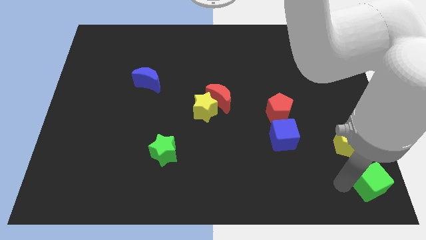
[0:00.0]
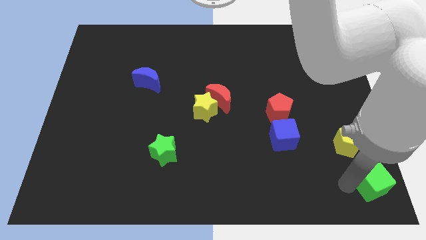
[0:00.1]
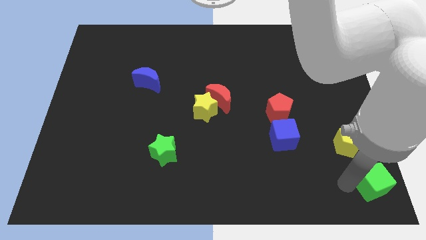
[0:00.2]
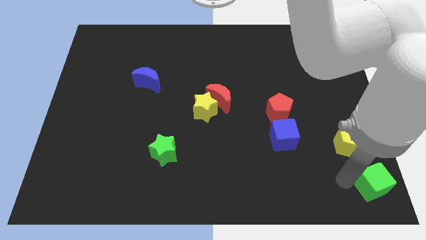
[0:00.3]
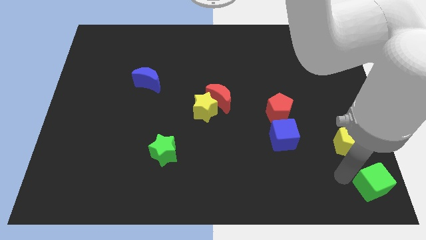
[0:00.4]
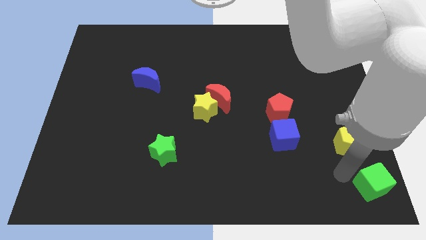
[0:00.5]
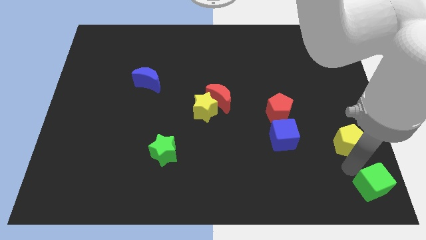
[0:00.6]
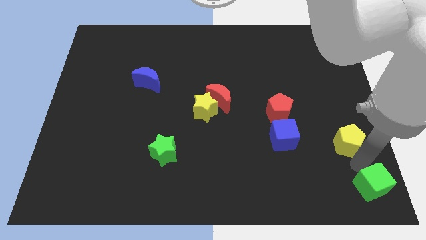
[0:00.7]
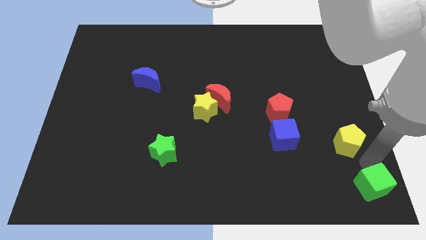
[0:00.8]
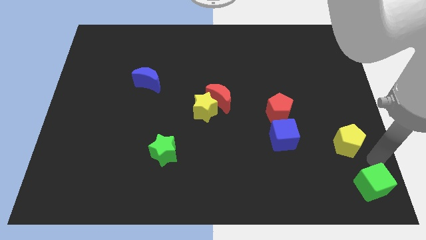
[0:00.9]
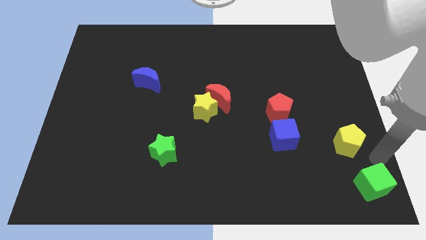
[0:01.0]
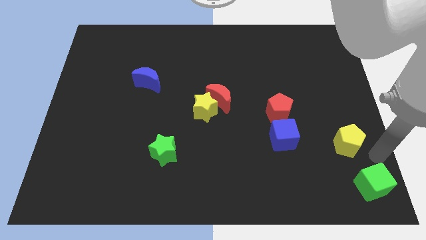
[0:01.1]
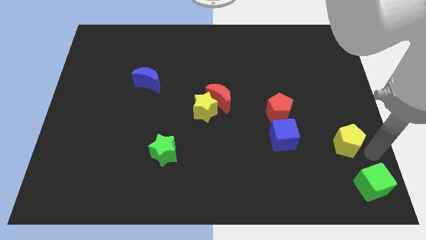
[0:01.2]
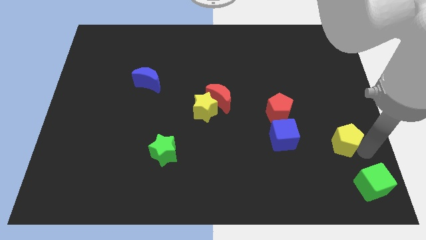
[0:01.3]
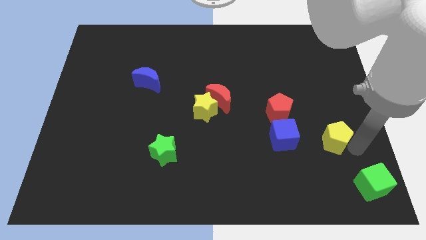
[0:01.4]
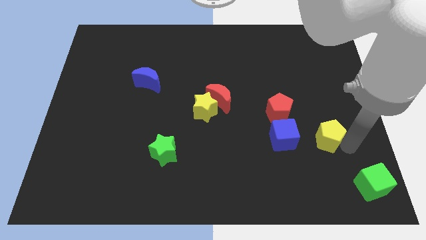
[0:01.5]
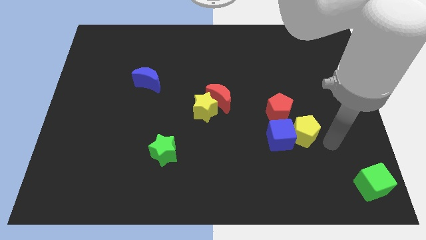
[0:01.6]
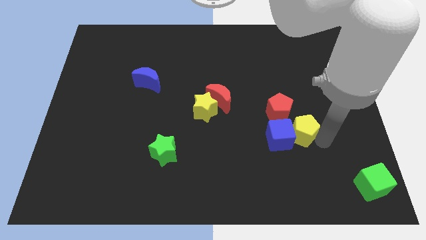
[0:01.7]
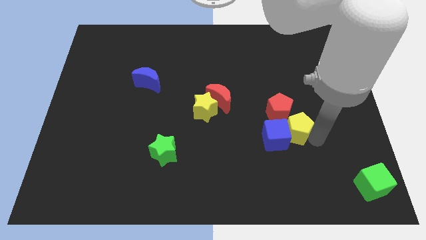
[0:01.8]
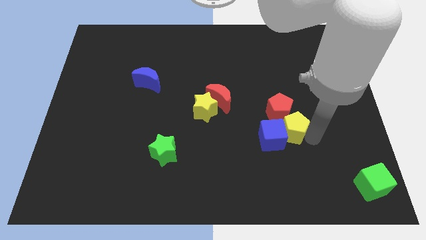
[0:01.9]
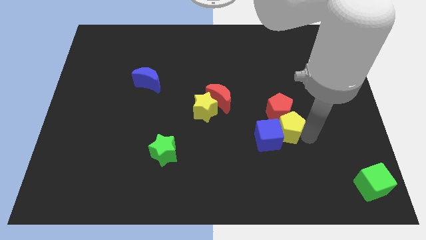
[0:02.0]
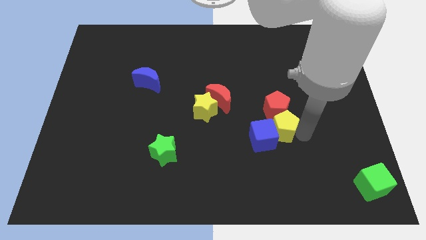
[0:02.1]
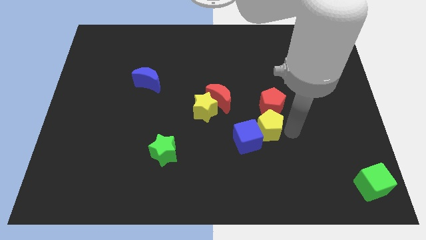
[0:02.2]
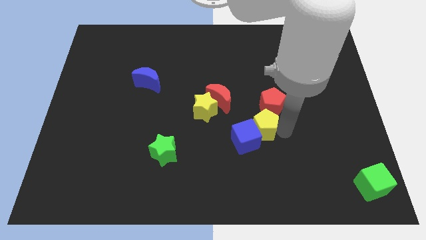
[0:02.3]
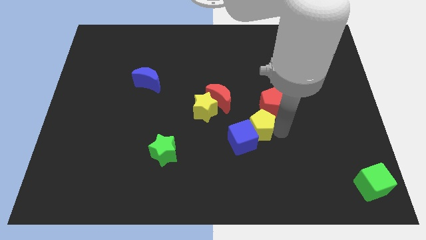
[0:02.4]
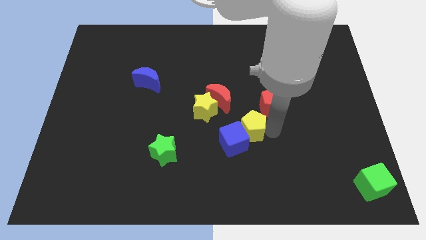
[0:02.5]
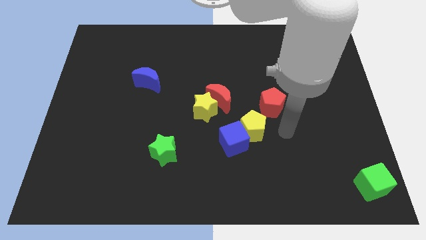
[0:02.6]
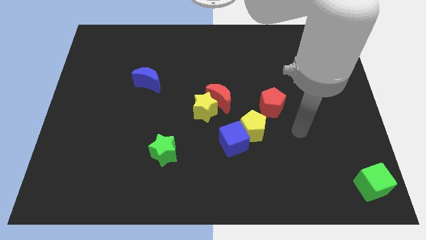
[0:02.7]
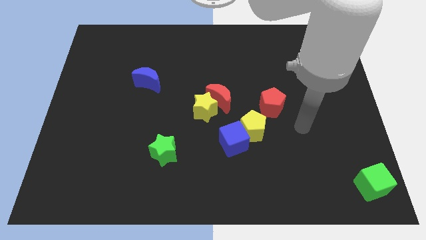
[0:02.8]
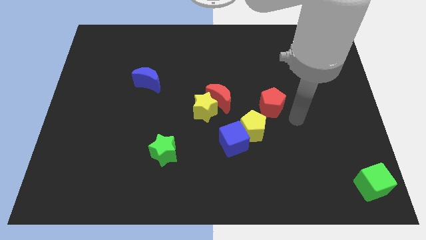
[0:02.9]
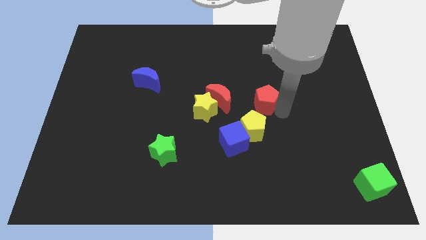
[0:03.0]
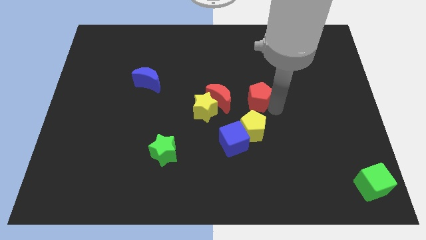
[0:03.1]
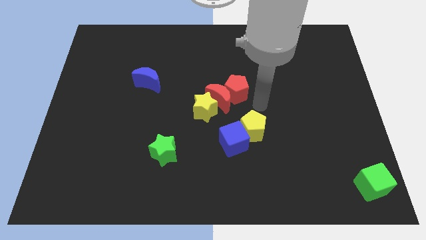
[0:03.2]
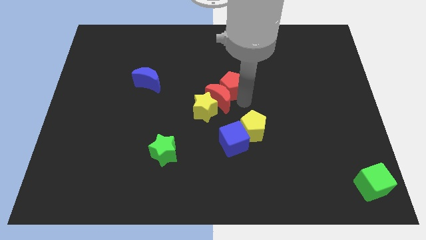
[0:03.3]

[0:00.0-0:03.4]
push the red pentagon beside red crescent

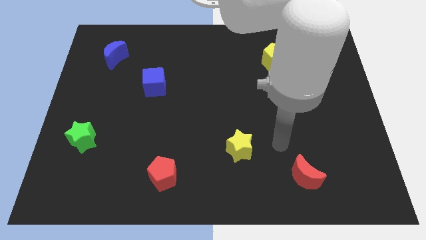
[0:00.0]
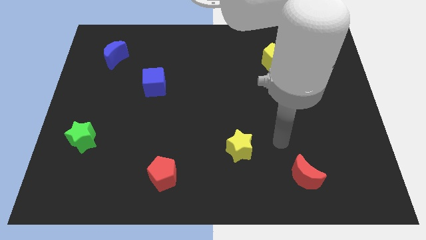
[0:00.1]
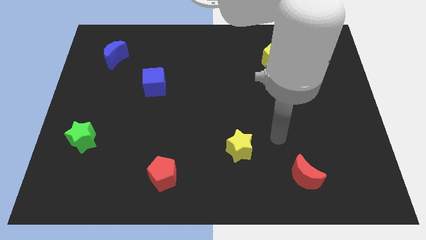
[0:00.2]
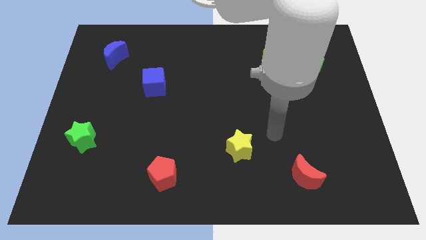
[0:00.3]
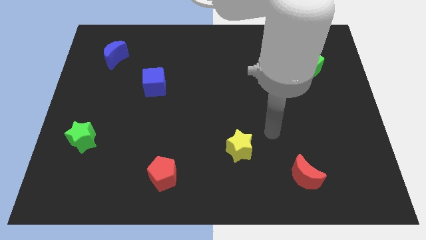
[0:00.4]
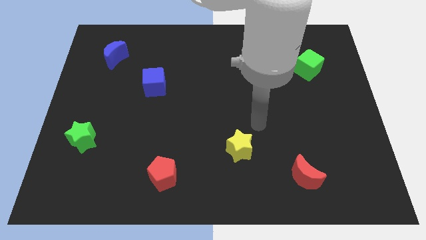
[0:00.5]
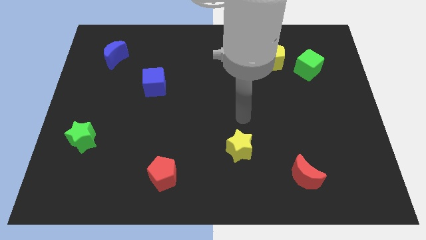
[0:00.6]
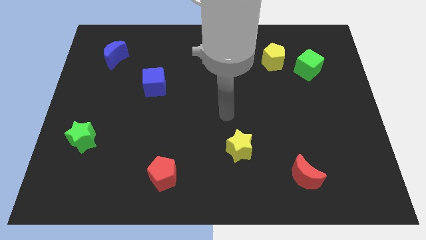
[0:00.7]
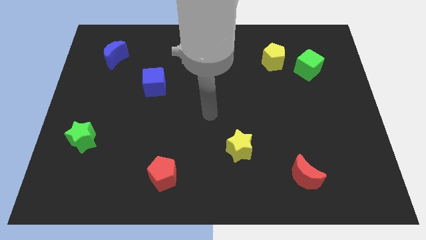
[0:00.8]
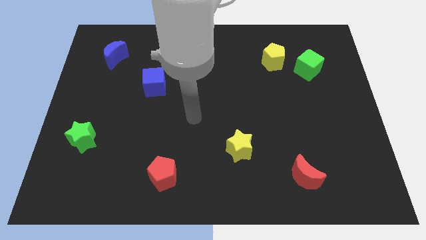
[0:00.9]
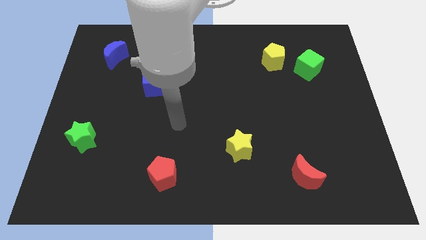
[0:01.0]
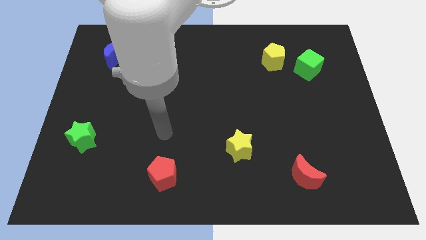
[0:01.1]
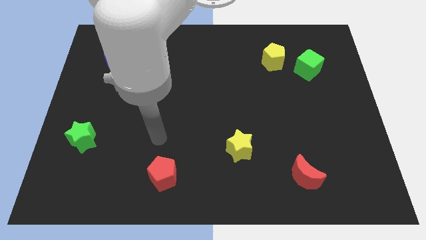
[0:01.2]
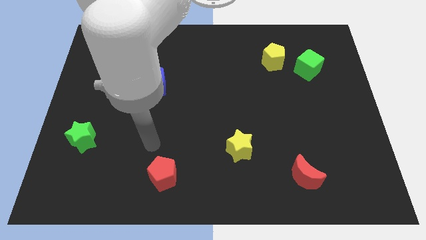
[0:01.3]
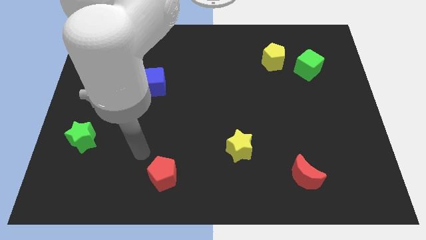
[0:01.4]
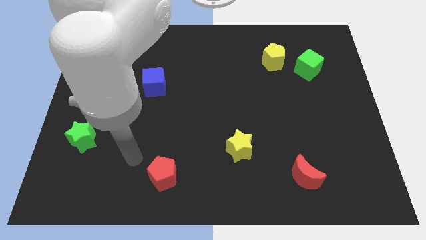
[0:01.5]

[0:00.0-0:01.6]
move your arm towards the red pentagon

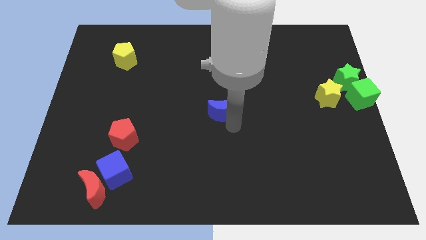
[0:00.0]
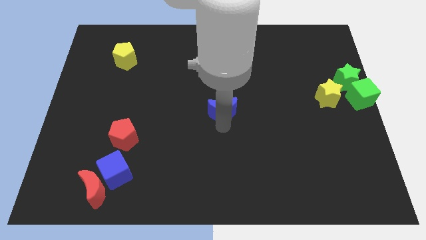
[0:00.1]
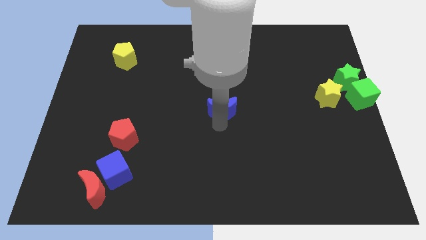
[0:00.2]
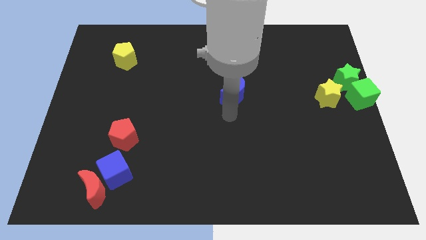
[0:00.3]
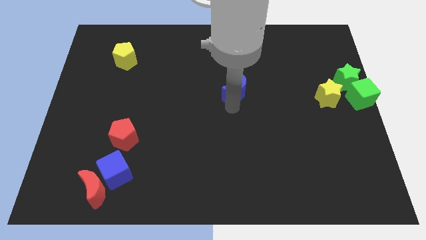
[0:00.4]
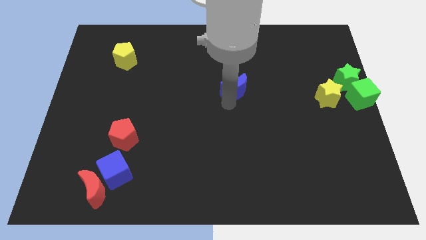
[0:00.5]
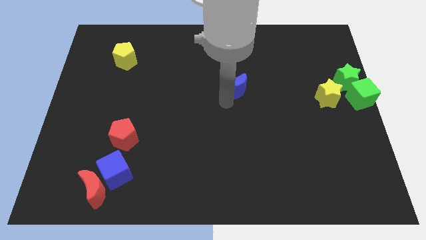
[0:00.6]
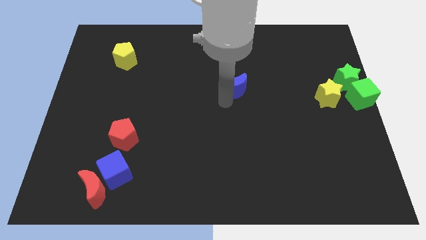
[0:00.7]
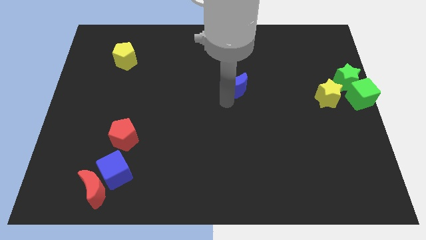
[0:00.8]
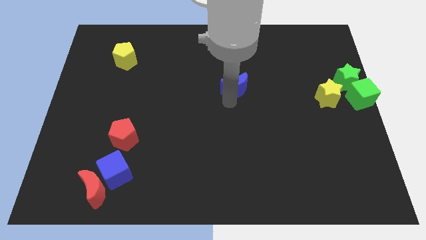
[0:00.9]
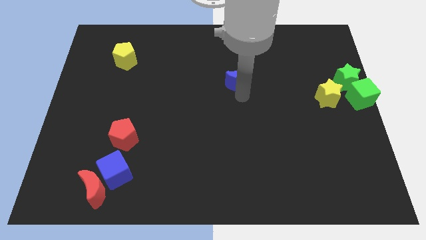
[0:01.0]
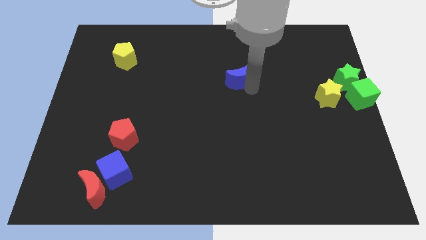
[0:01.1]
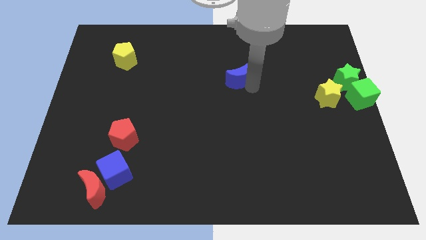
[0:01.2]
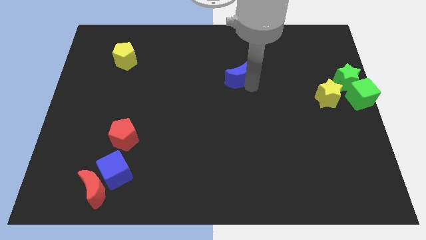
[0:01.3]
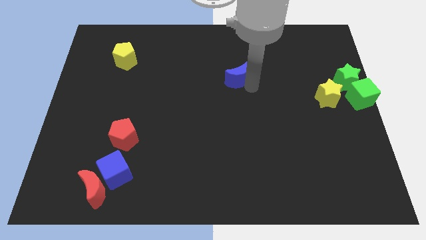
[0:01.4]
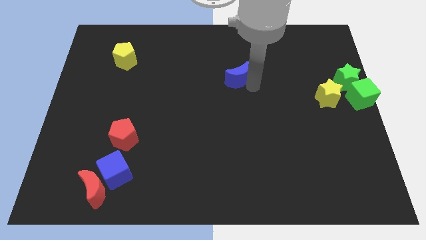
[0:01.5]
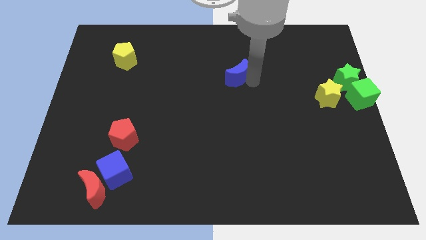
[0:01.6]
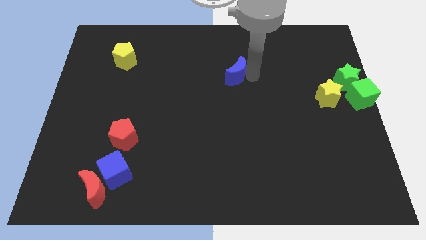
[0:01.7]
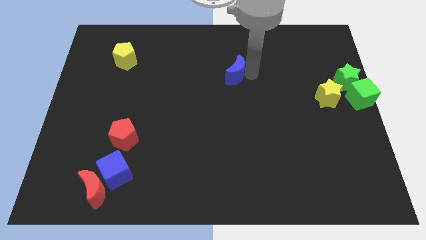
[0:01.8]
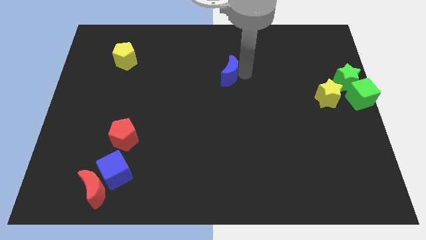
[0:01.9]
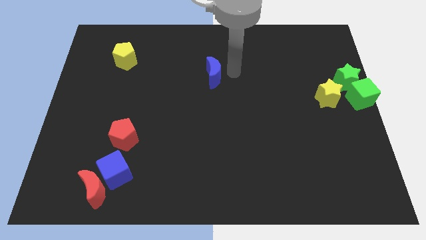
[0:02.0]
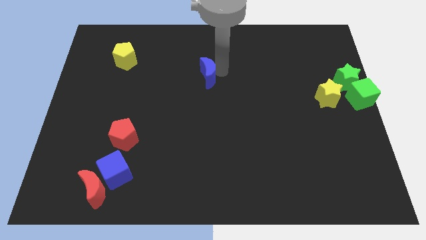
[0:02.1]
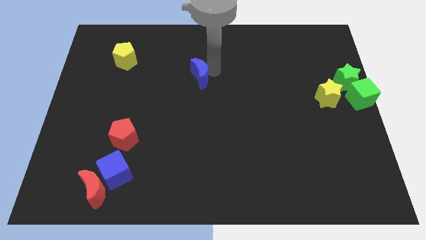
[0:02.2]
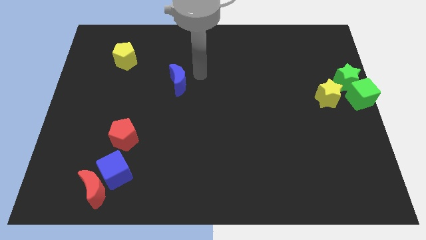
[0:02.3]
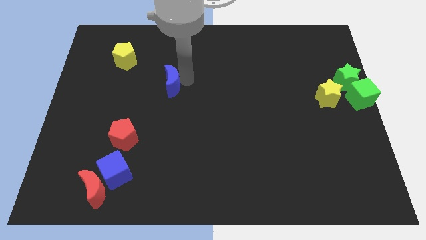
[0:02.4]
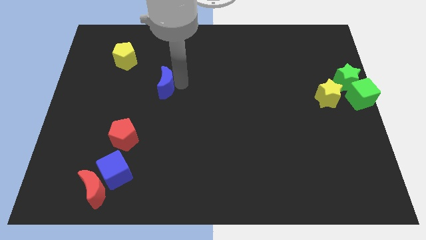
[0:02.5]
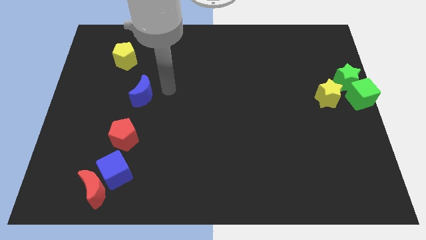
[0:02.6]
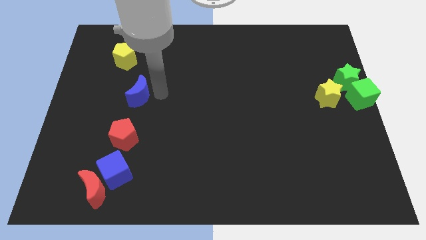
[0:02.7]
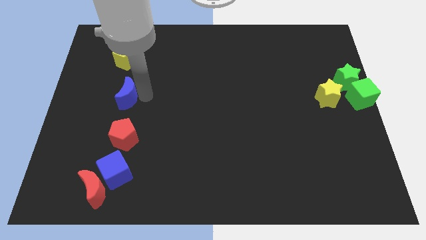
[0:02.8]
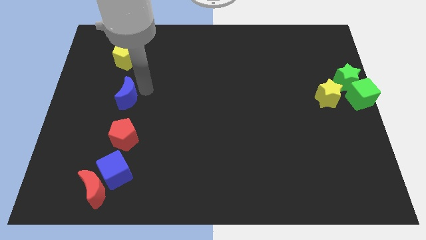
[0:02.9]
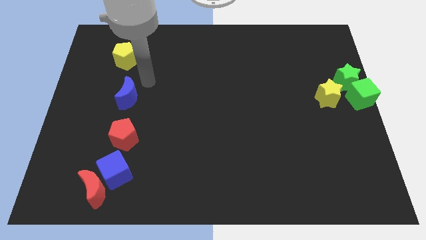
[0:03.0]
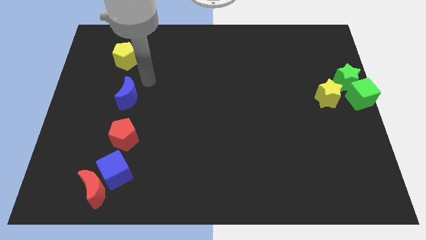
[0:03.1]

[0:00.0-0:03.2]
put the blue moon in between the yellow pentagon and red pentagon

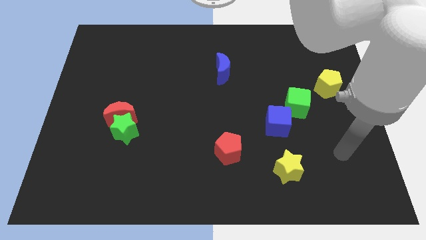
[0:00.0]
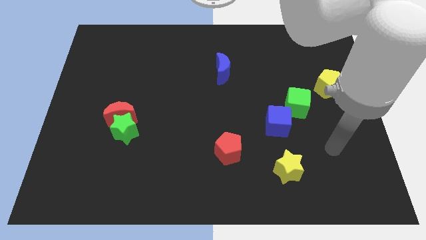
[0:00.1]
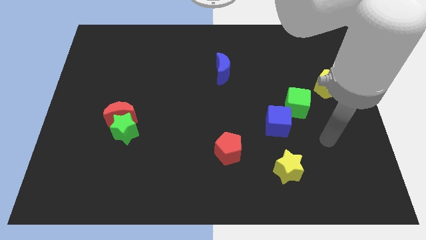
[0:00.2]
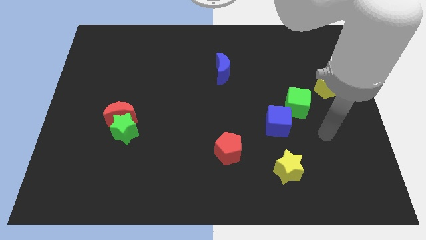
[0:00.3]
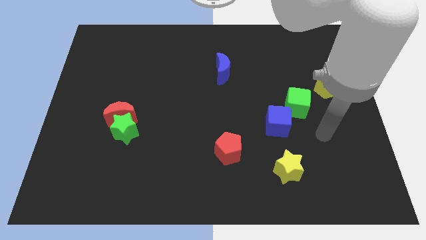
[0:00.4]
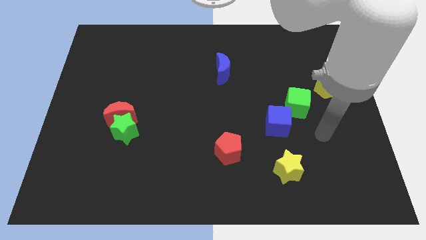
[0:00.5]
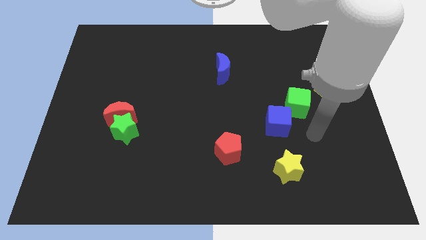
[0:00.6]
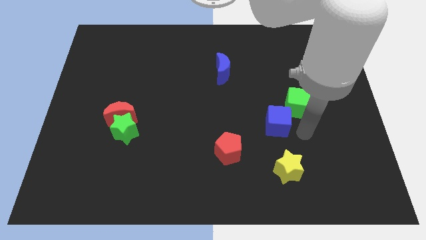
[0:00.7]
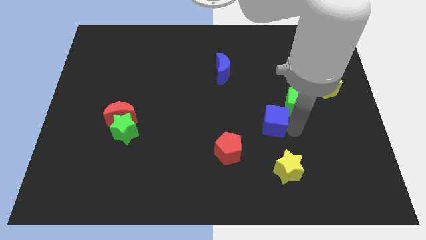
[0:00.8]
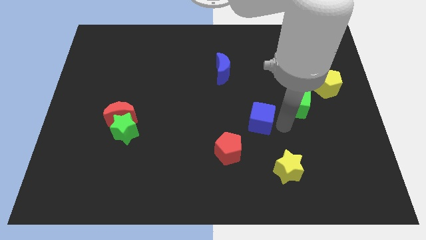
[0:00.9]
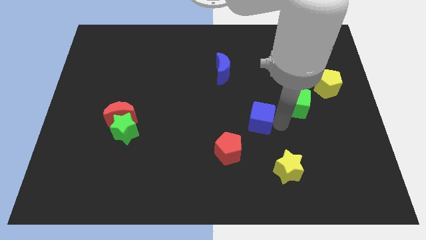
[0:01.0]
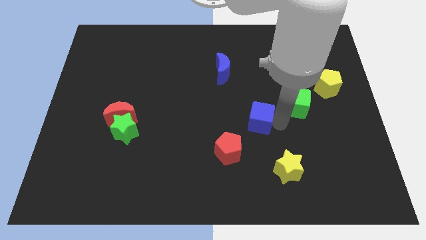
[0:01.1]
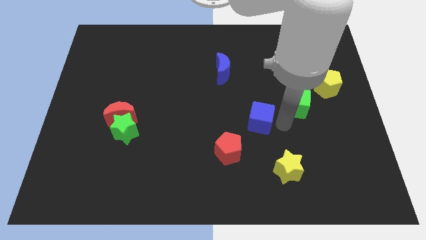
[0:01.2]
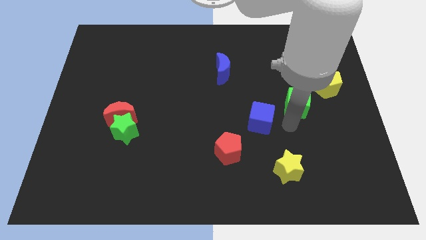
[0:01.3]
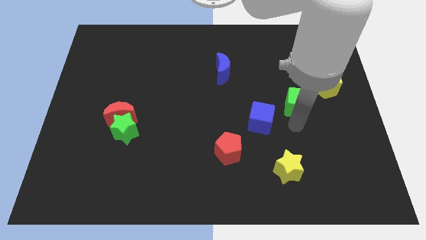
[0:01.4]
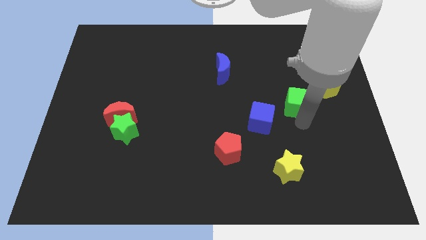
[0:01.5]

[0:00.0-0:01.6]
slightly push the blue cube in between the green cube and red pentagon
